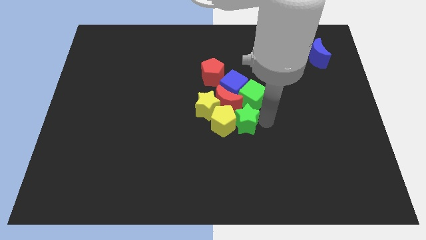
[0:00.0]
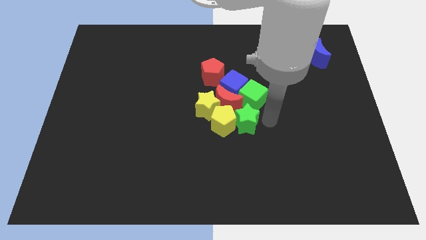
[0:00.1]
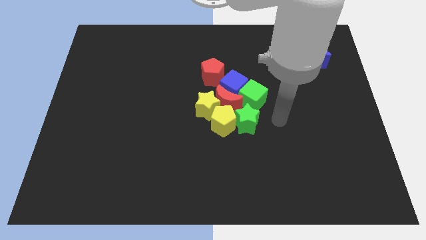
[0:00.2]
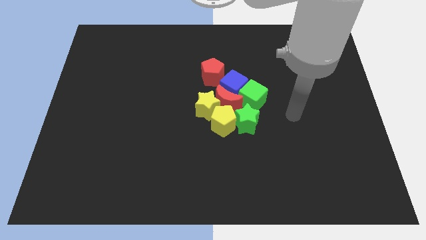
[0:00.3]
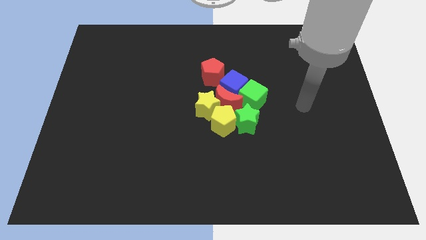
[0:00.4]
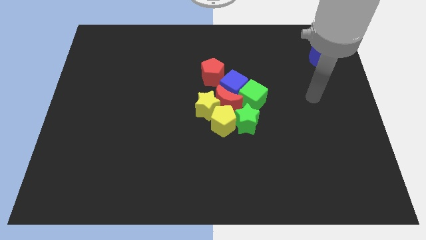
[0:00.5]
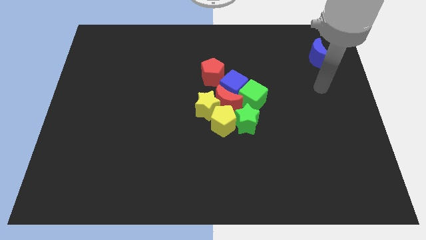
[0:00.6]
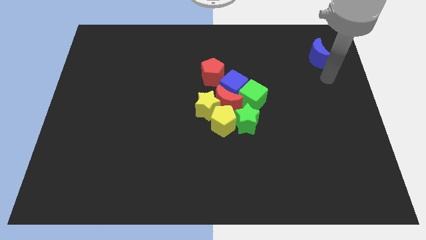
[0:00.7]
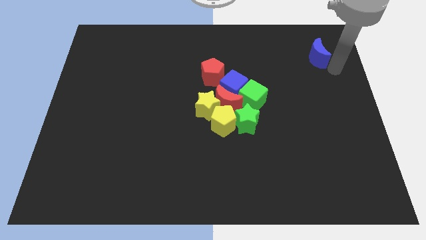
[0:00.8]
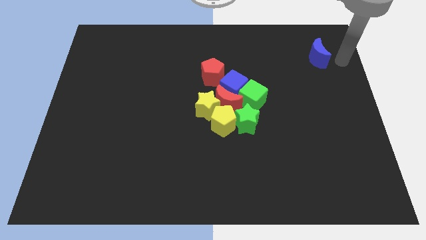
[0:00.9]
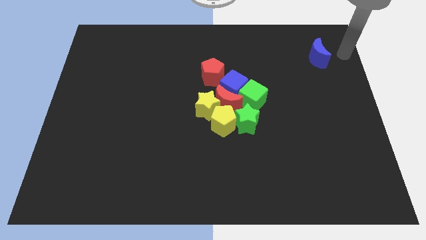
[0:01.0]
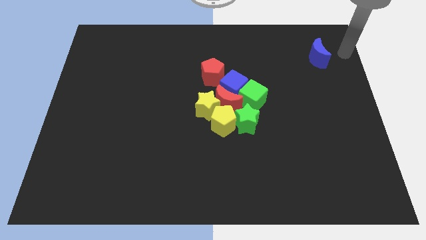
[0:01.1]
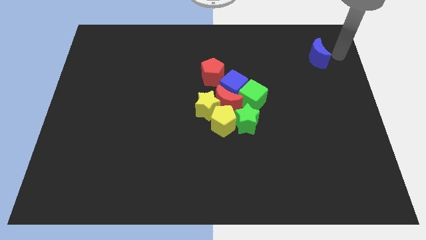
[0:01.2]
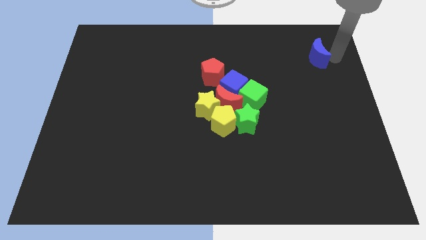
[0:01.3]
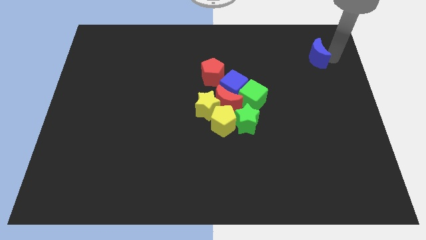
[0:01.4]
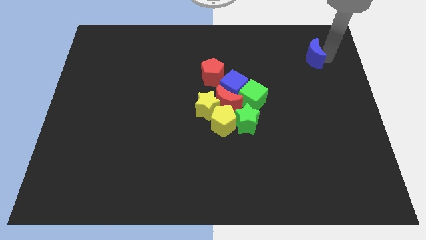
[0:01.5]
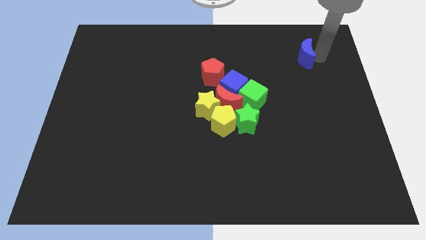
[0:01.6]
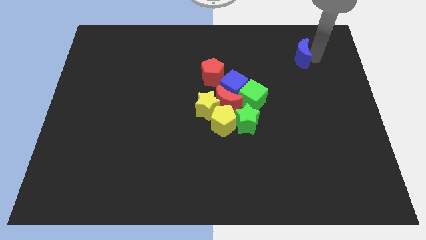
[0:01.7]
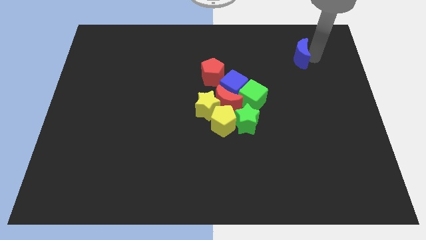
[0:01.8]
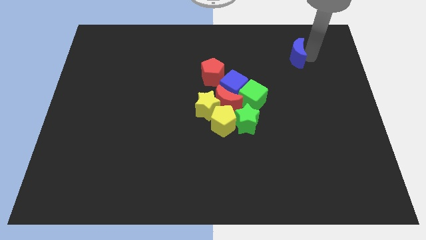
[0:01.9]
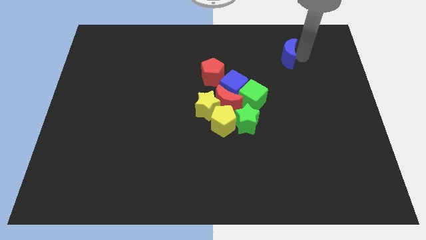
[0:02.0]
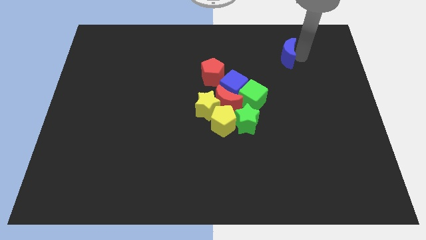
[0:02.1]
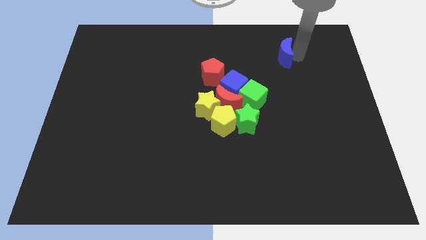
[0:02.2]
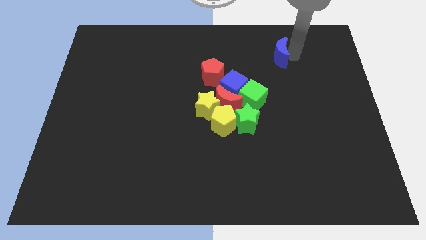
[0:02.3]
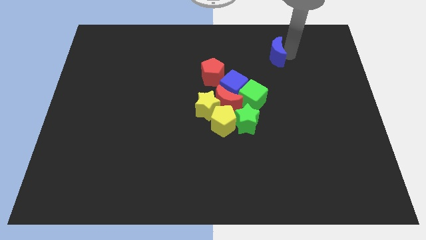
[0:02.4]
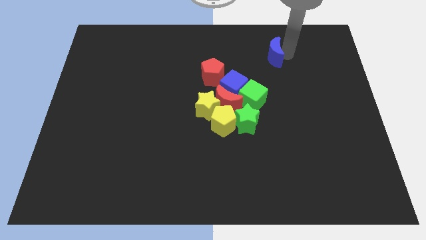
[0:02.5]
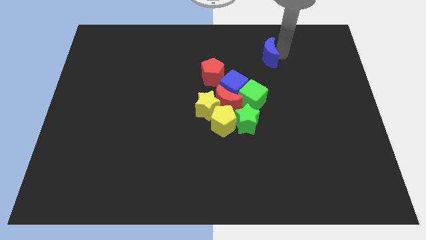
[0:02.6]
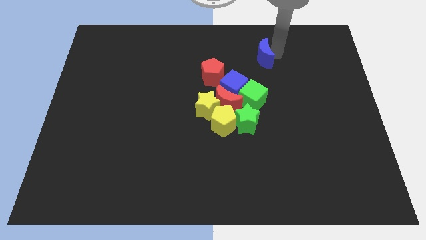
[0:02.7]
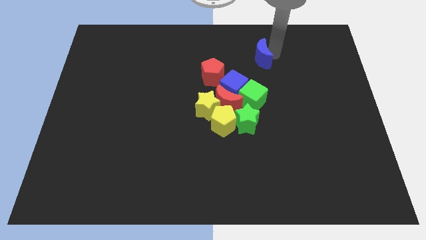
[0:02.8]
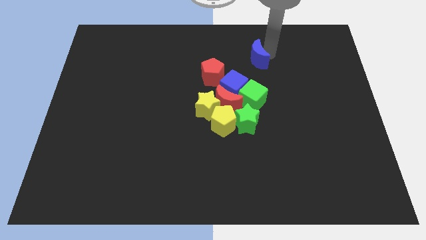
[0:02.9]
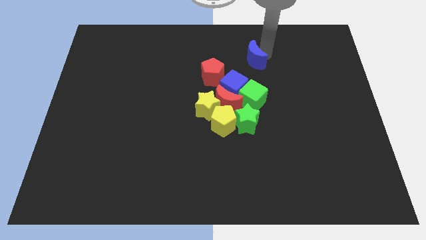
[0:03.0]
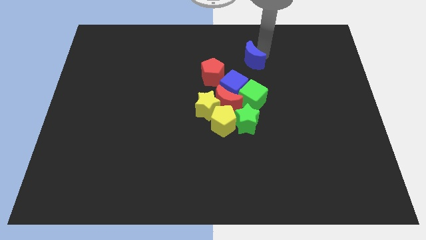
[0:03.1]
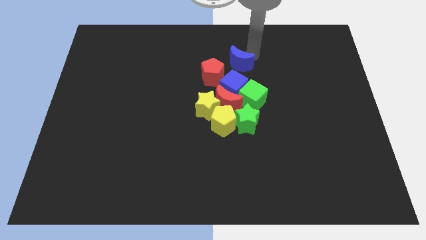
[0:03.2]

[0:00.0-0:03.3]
move the blue crescent to the top of the green cube

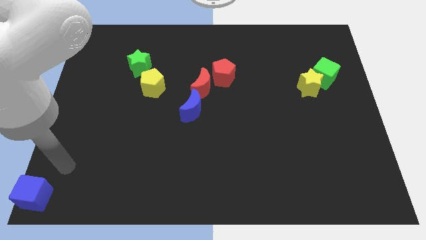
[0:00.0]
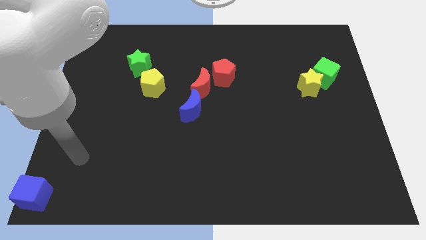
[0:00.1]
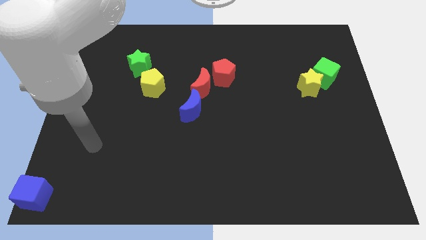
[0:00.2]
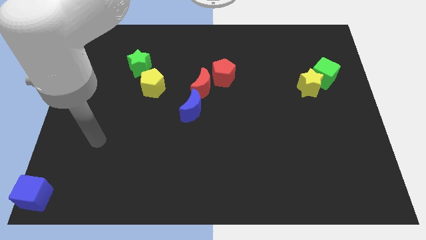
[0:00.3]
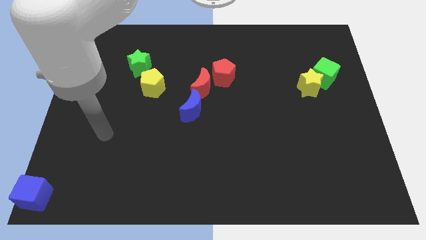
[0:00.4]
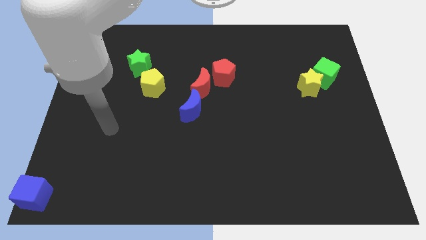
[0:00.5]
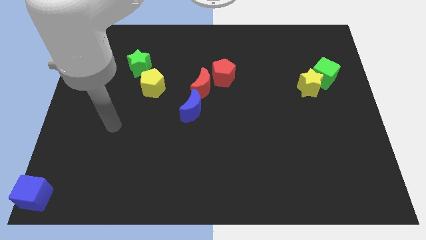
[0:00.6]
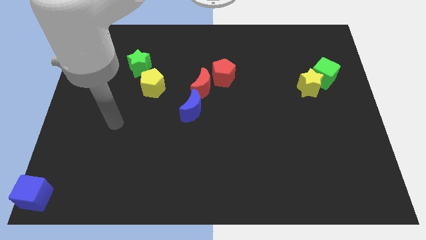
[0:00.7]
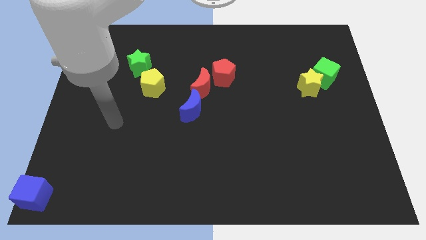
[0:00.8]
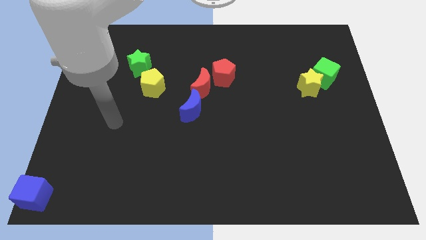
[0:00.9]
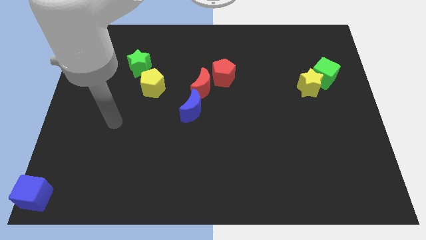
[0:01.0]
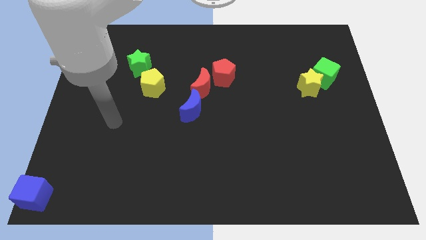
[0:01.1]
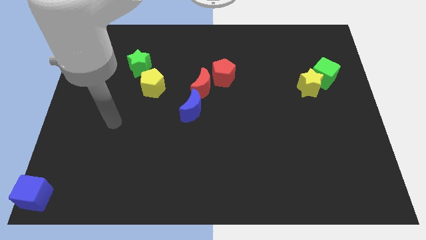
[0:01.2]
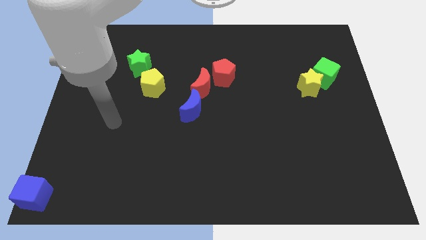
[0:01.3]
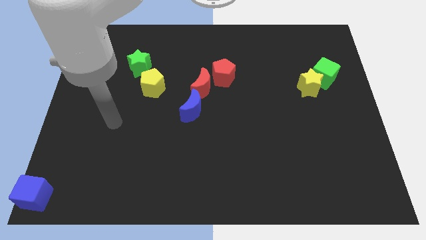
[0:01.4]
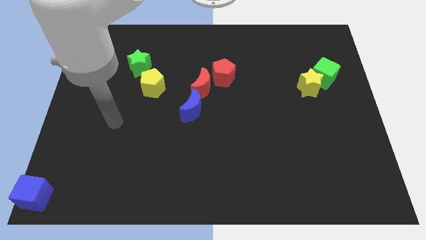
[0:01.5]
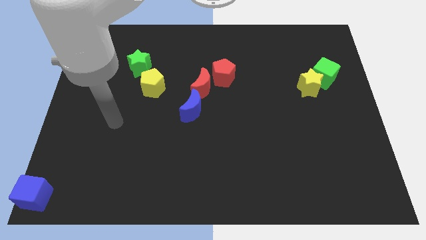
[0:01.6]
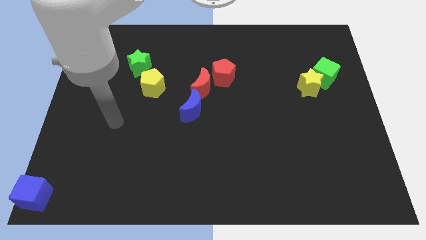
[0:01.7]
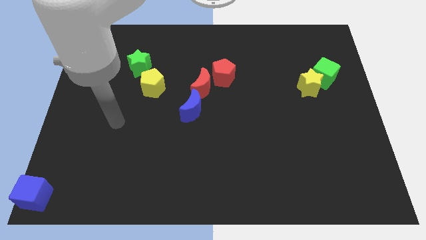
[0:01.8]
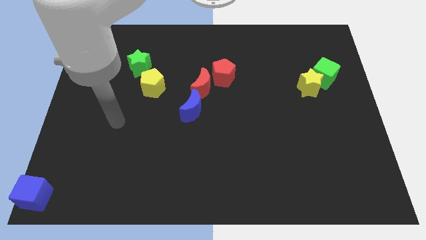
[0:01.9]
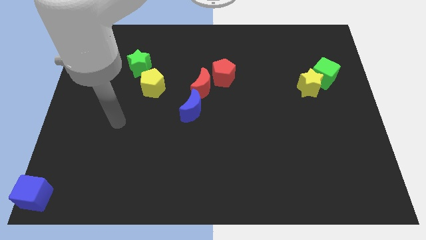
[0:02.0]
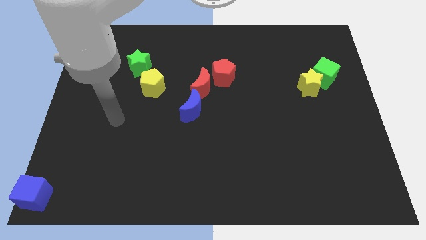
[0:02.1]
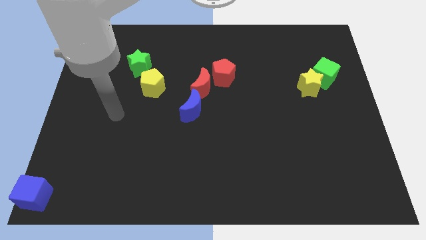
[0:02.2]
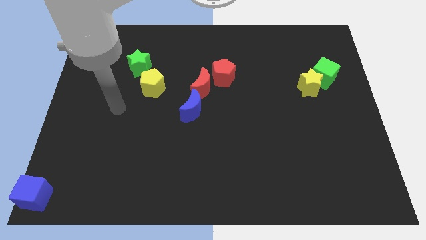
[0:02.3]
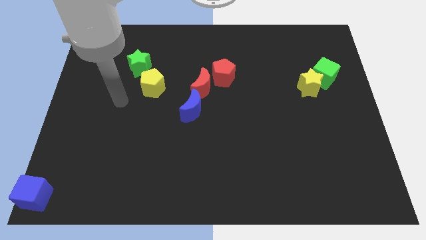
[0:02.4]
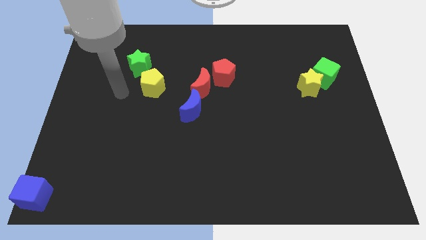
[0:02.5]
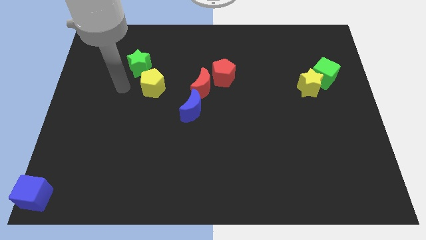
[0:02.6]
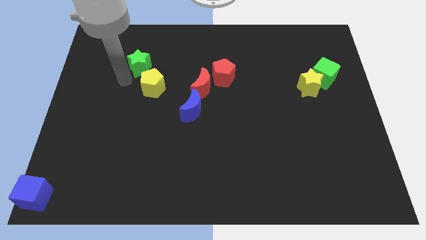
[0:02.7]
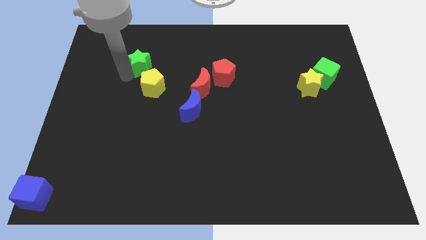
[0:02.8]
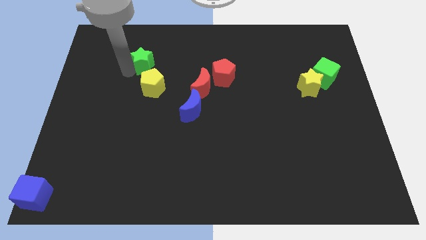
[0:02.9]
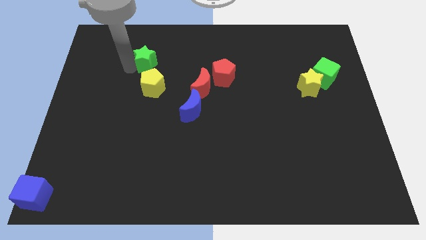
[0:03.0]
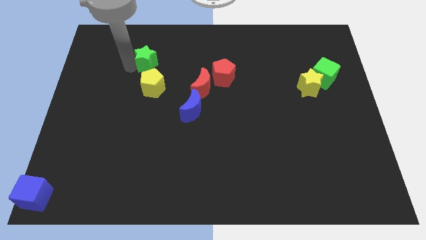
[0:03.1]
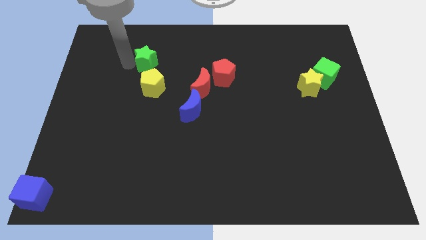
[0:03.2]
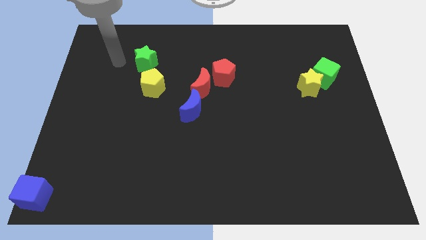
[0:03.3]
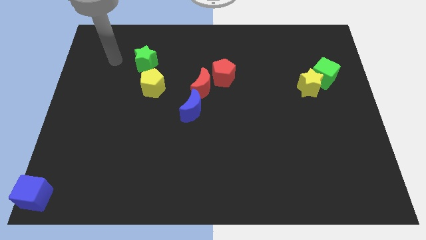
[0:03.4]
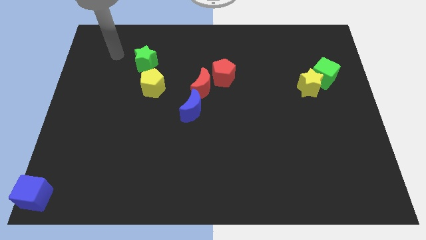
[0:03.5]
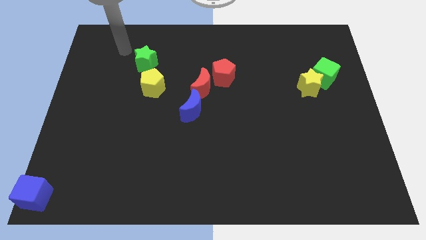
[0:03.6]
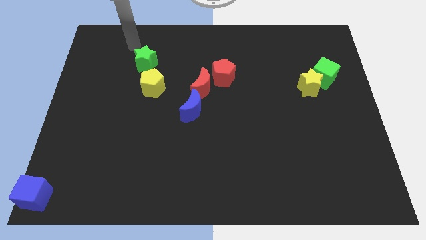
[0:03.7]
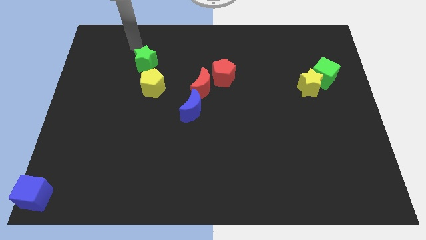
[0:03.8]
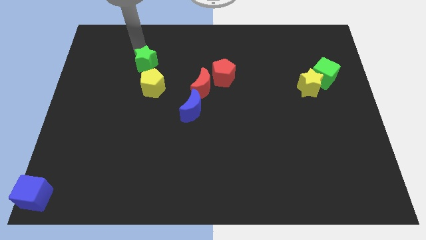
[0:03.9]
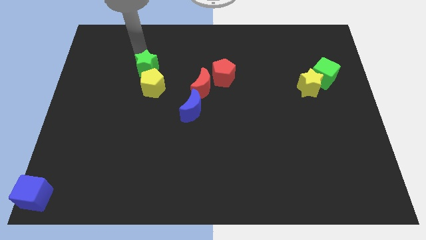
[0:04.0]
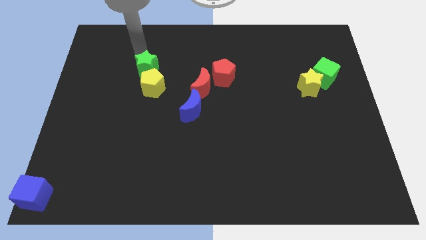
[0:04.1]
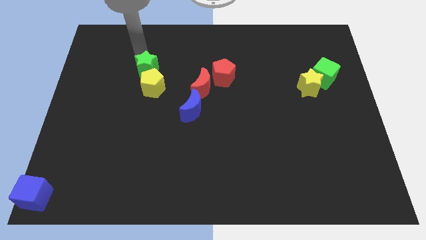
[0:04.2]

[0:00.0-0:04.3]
push the green star towards the yellow pentagon

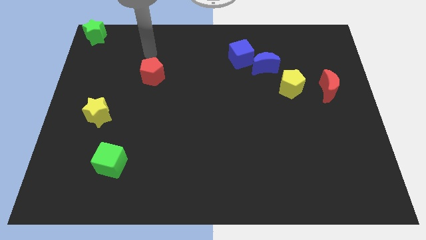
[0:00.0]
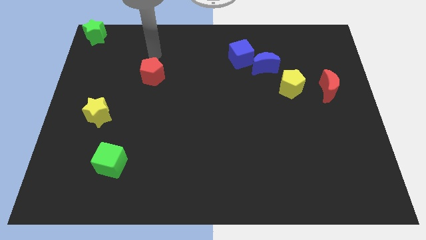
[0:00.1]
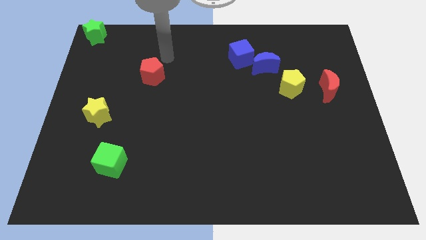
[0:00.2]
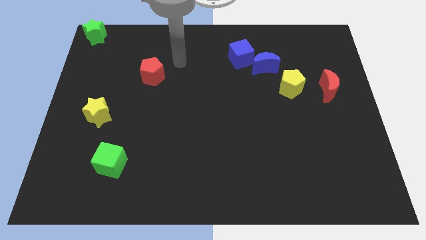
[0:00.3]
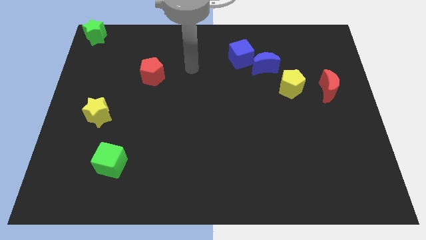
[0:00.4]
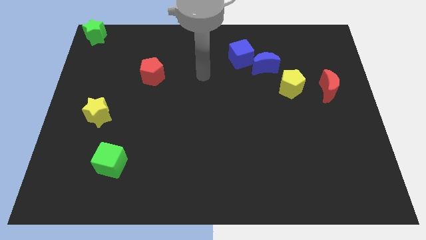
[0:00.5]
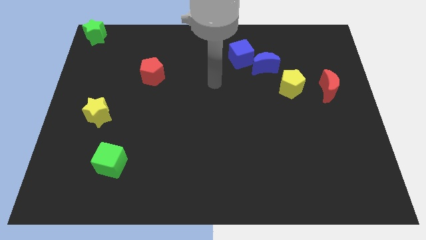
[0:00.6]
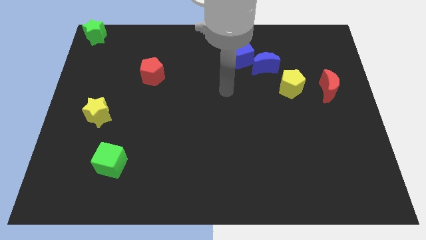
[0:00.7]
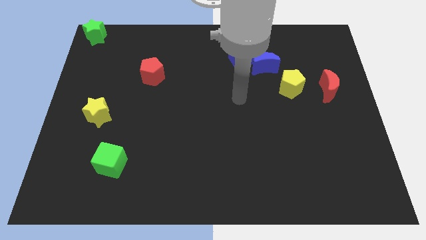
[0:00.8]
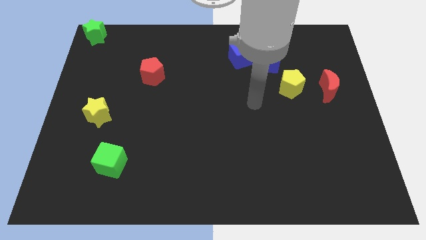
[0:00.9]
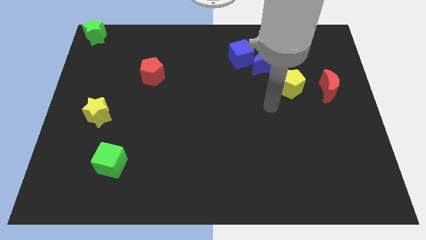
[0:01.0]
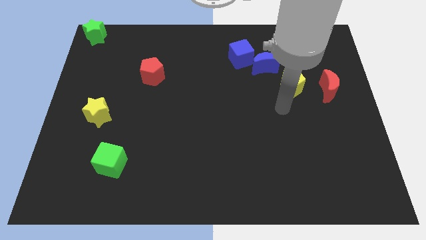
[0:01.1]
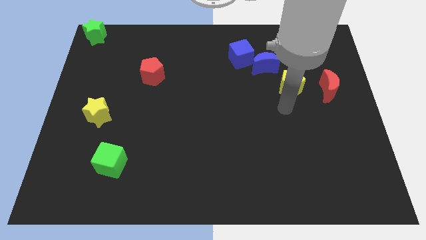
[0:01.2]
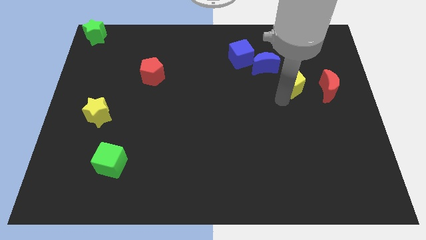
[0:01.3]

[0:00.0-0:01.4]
slide your arm to the bottom of the yellow pentagon
